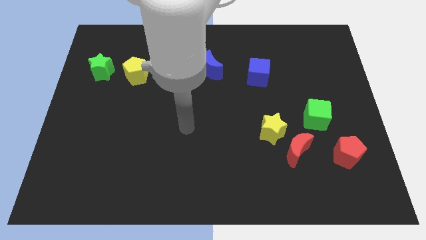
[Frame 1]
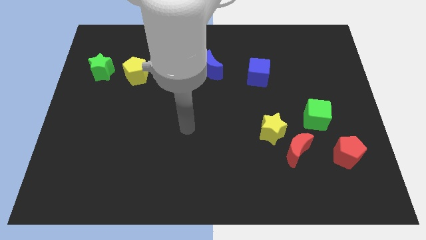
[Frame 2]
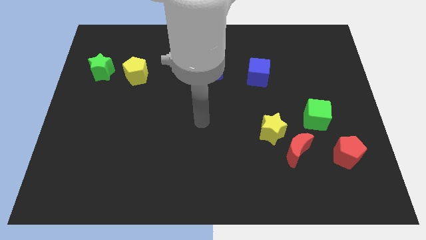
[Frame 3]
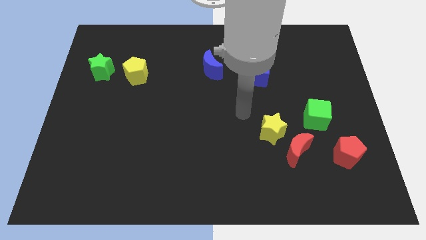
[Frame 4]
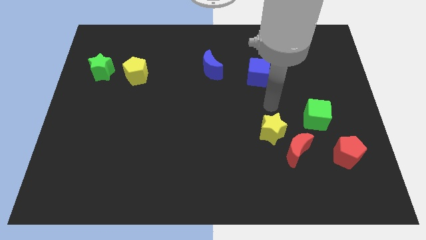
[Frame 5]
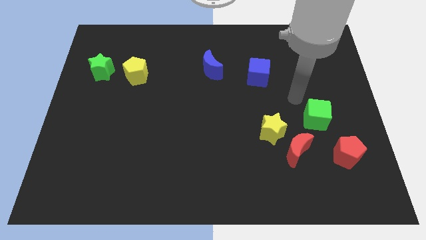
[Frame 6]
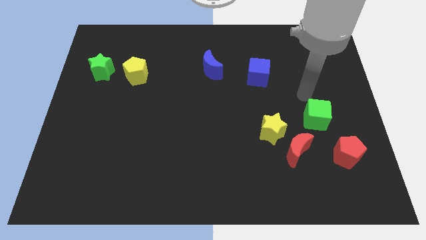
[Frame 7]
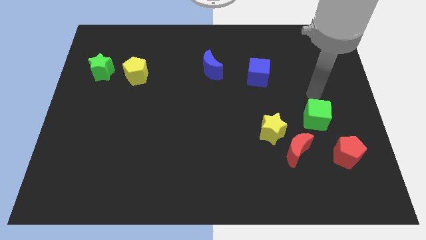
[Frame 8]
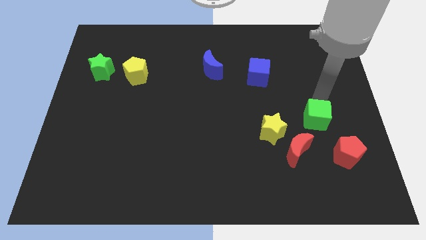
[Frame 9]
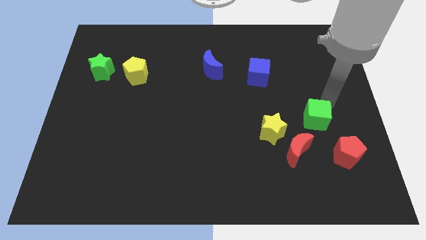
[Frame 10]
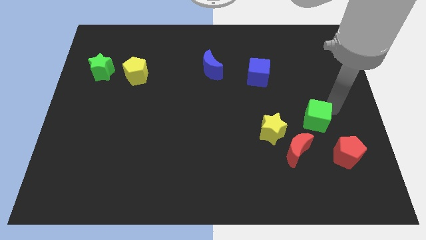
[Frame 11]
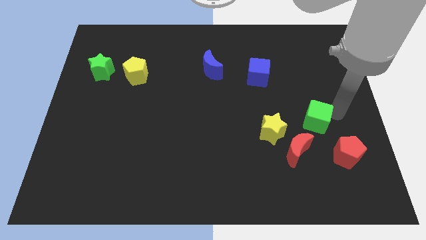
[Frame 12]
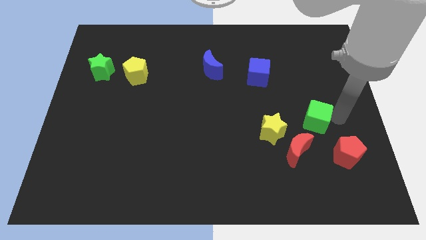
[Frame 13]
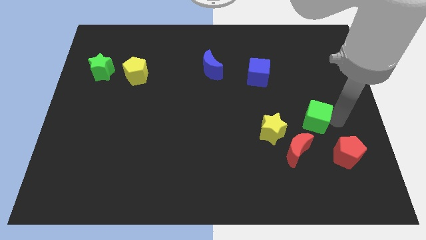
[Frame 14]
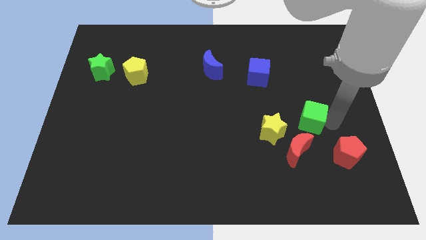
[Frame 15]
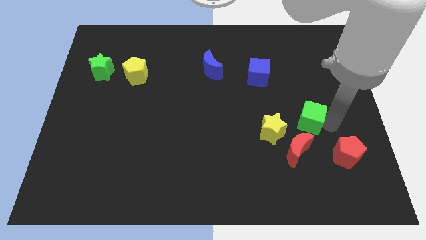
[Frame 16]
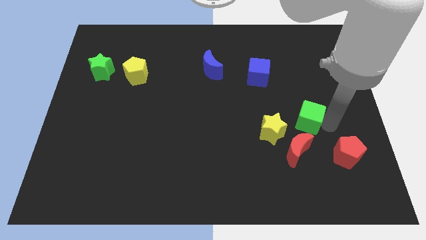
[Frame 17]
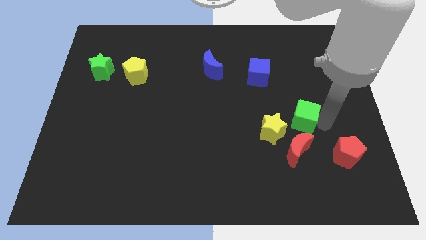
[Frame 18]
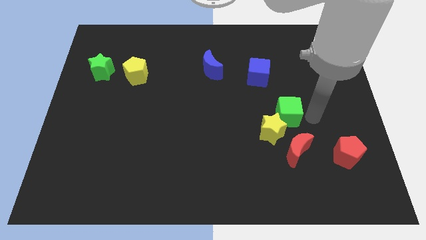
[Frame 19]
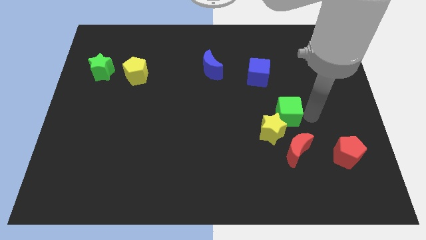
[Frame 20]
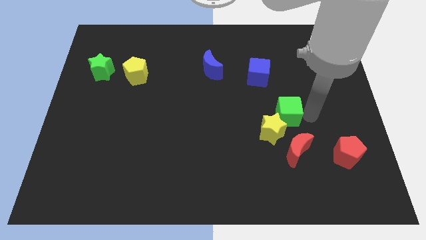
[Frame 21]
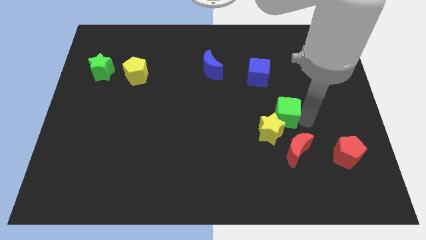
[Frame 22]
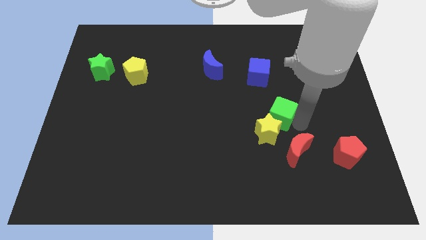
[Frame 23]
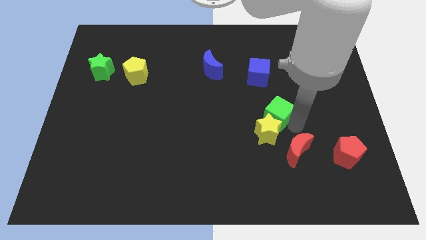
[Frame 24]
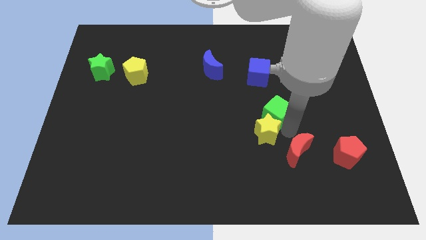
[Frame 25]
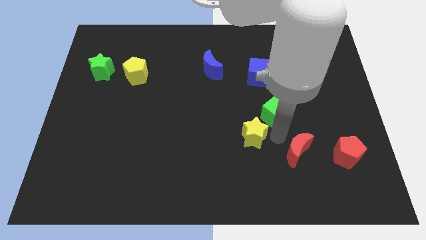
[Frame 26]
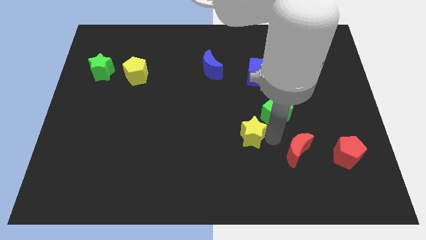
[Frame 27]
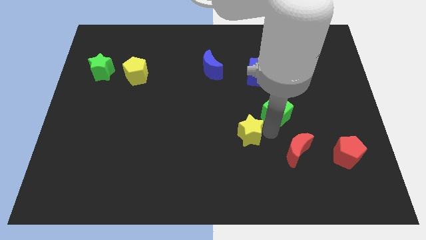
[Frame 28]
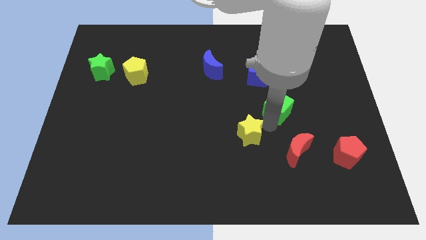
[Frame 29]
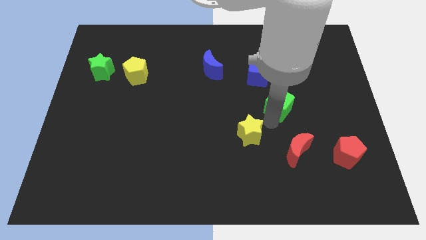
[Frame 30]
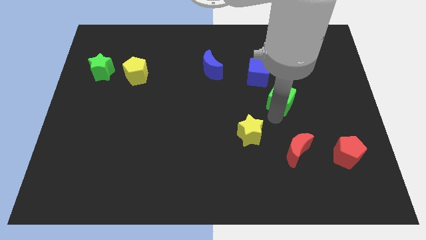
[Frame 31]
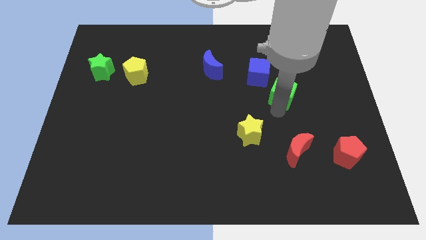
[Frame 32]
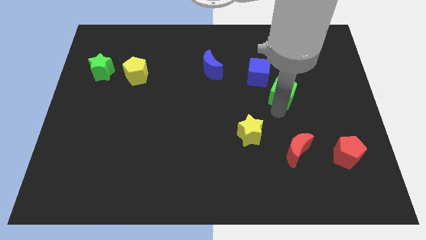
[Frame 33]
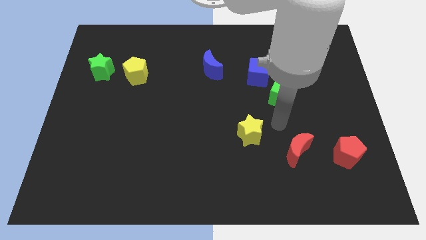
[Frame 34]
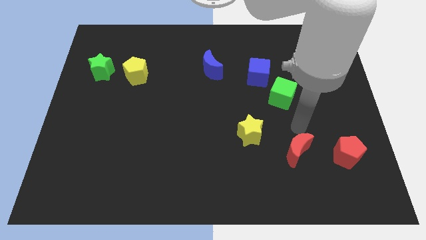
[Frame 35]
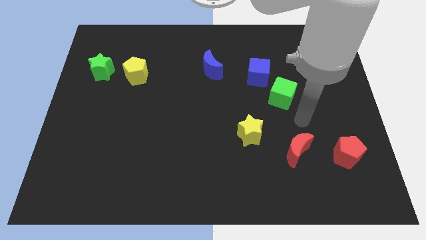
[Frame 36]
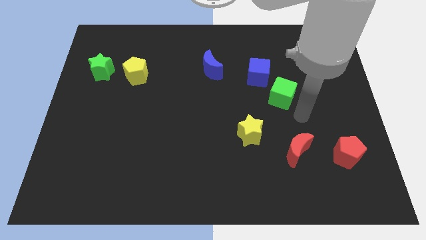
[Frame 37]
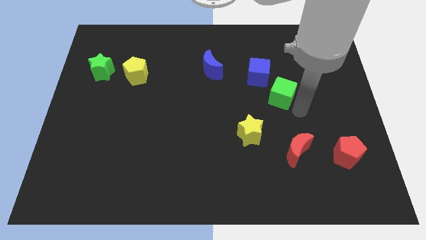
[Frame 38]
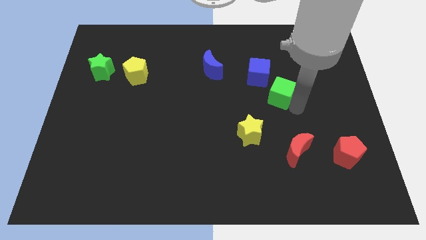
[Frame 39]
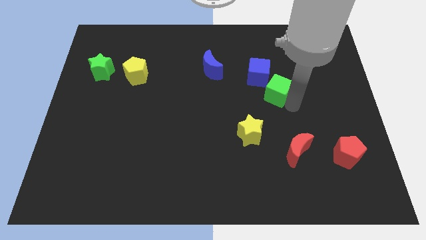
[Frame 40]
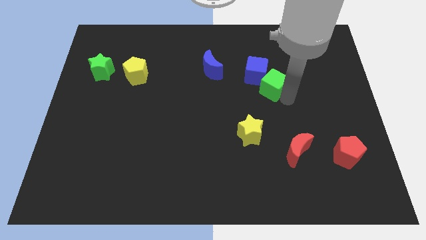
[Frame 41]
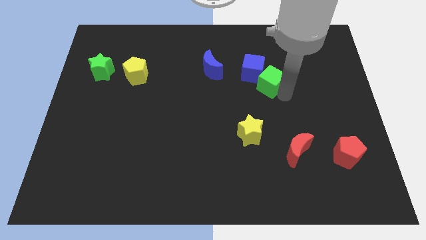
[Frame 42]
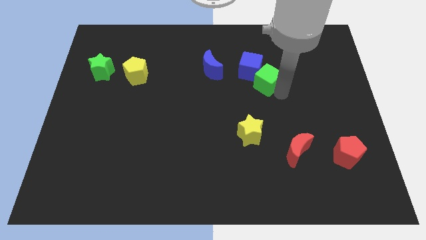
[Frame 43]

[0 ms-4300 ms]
move the green cube towards the blue cube

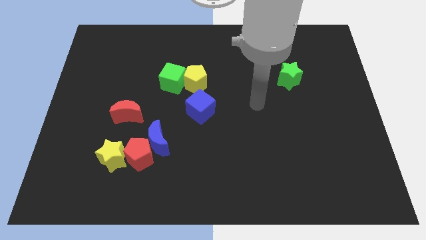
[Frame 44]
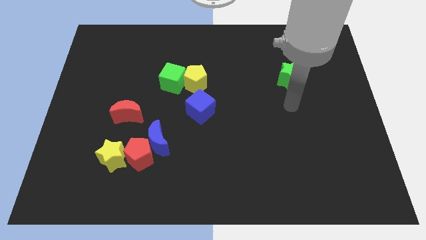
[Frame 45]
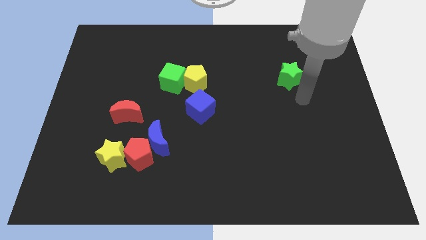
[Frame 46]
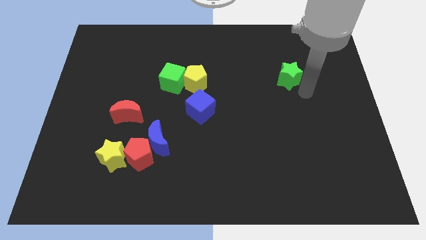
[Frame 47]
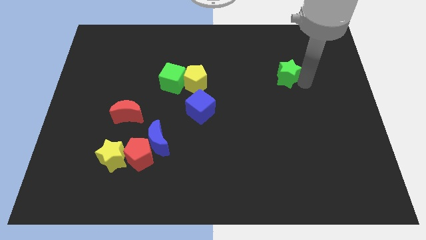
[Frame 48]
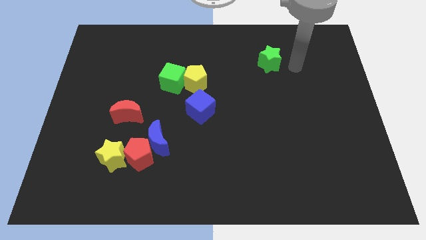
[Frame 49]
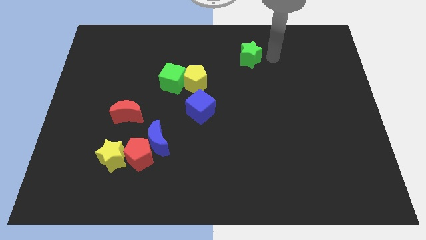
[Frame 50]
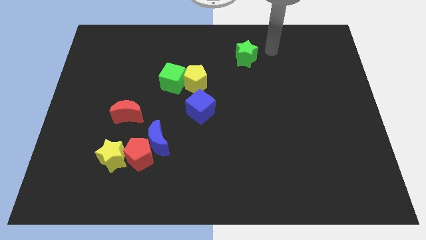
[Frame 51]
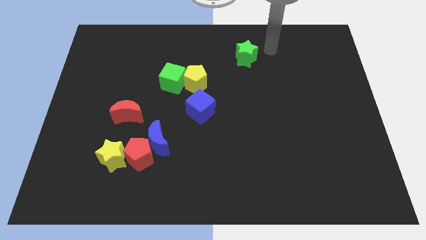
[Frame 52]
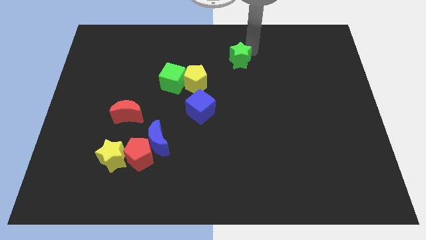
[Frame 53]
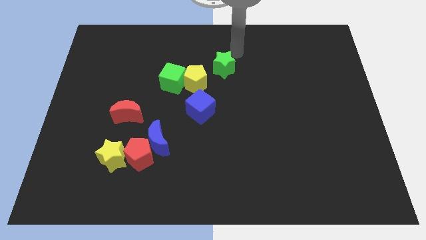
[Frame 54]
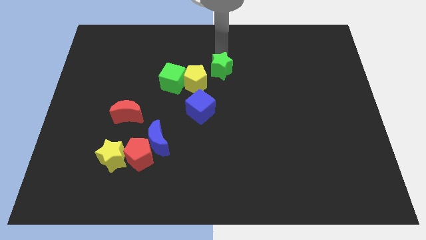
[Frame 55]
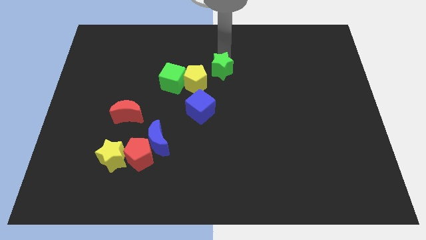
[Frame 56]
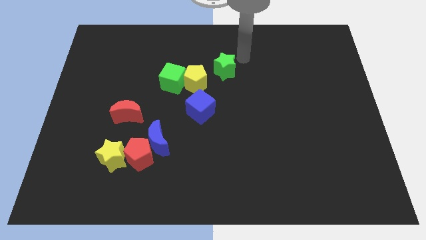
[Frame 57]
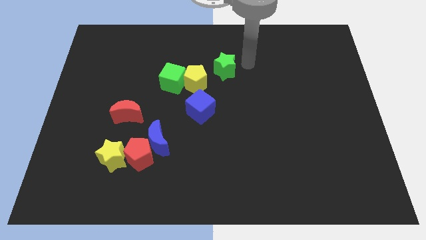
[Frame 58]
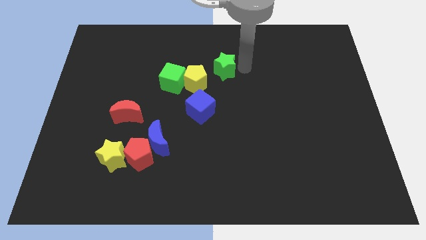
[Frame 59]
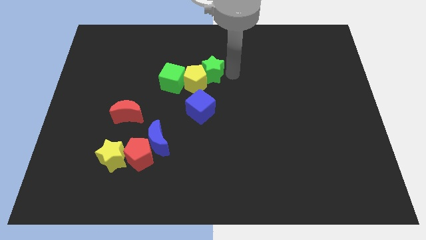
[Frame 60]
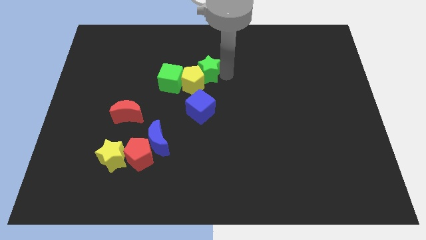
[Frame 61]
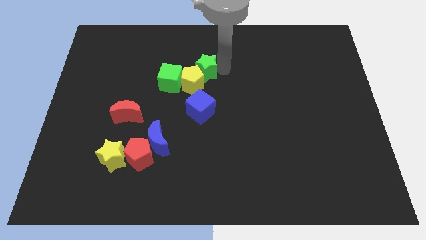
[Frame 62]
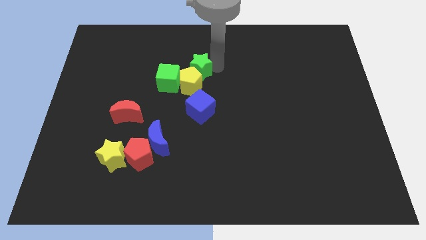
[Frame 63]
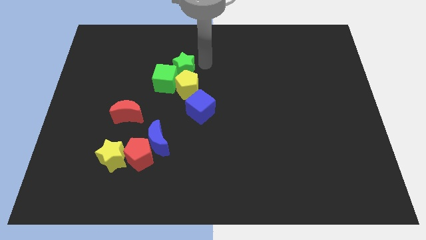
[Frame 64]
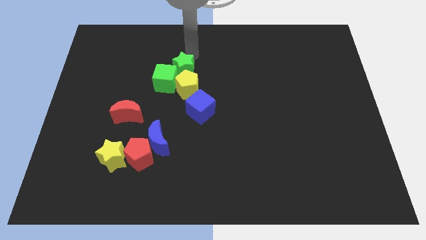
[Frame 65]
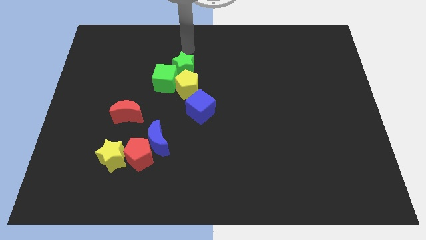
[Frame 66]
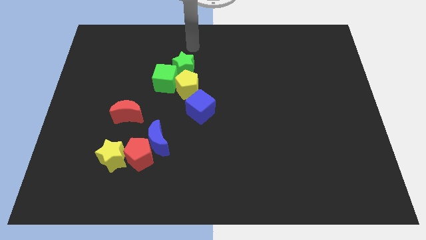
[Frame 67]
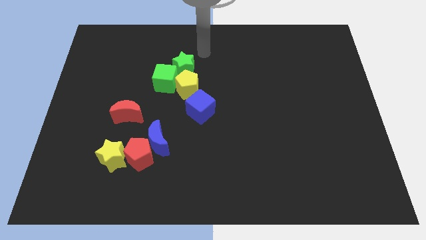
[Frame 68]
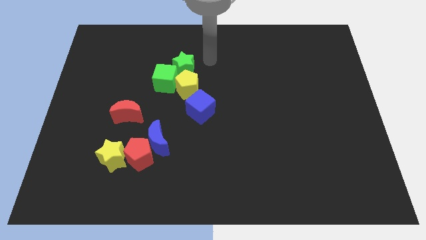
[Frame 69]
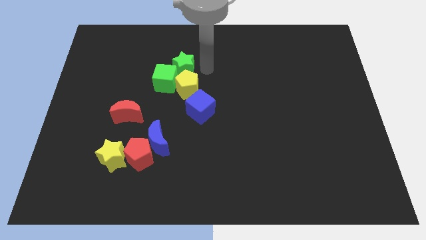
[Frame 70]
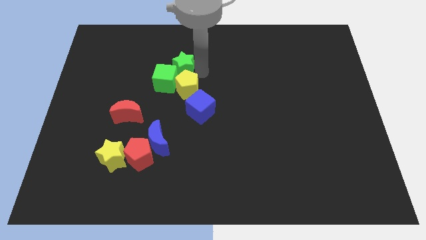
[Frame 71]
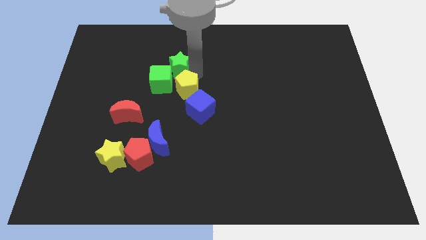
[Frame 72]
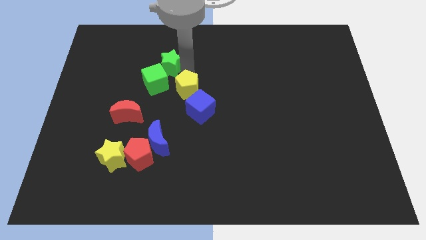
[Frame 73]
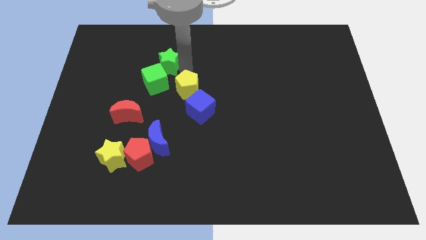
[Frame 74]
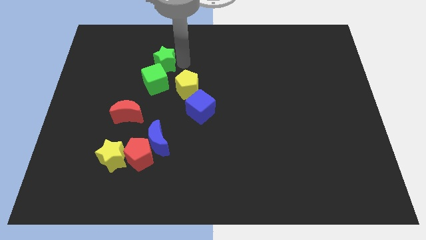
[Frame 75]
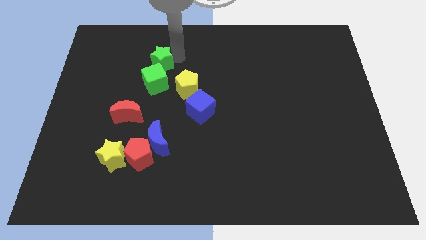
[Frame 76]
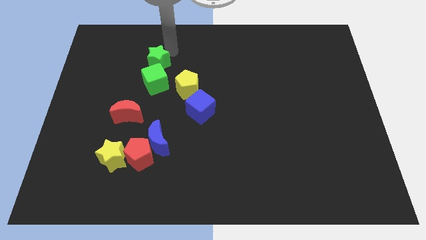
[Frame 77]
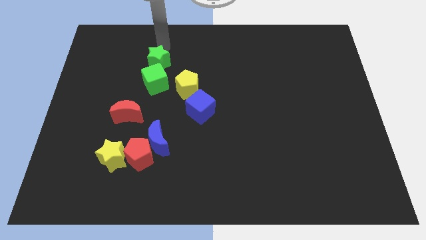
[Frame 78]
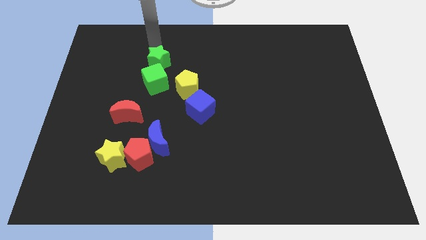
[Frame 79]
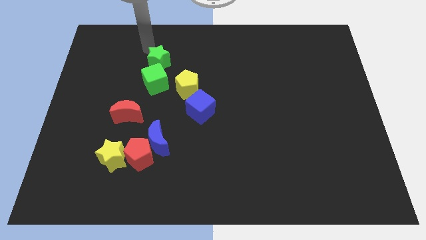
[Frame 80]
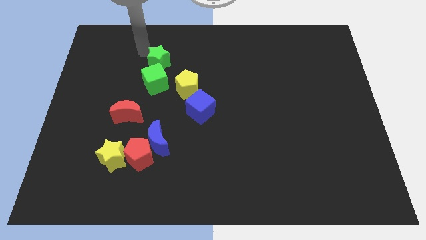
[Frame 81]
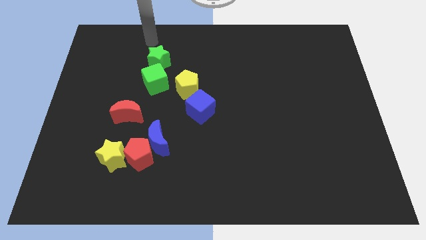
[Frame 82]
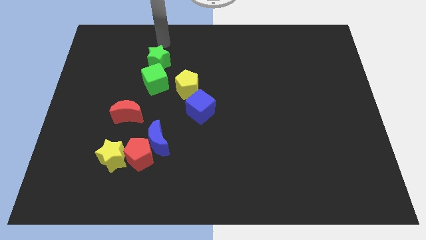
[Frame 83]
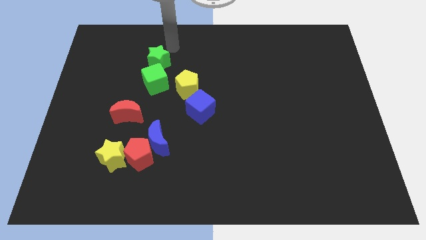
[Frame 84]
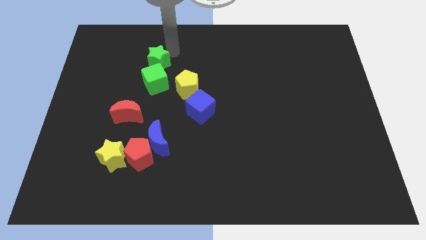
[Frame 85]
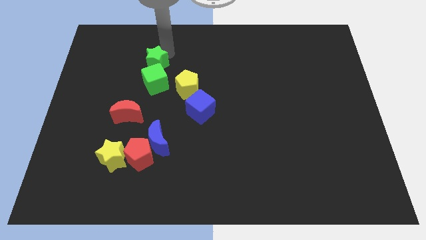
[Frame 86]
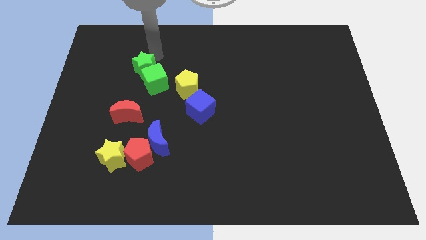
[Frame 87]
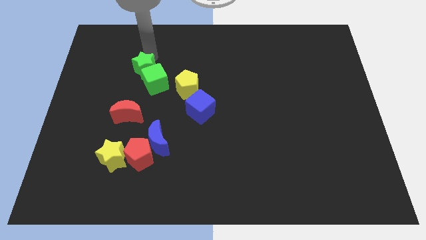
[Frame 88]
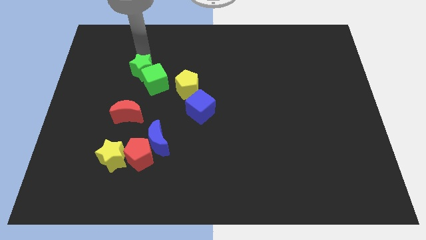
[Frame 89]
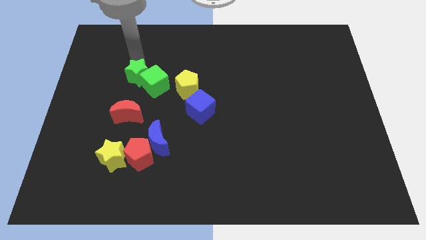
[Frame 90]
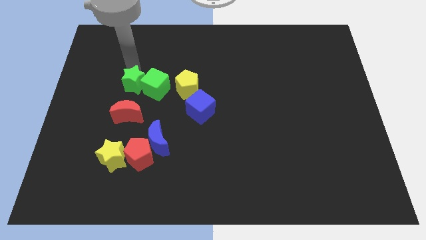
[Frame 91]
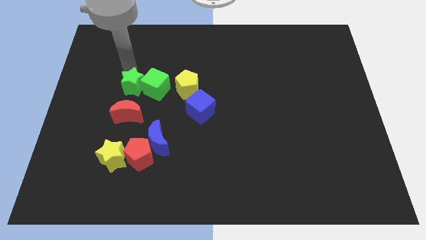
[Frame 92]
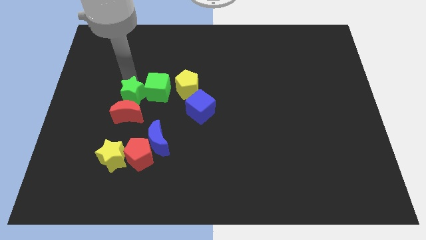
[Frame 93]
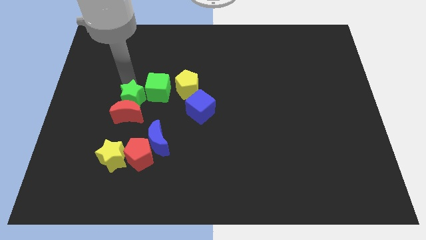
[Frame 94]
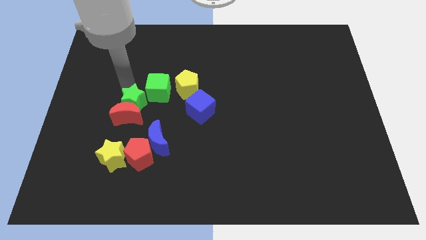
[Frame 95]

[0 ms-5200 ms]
slide the green star next to the red moon
